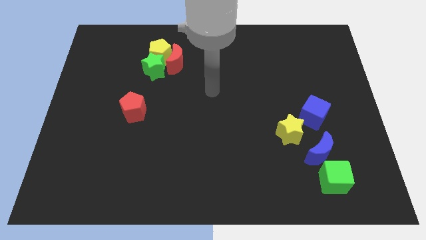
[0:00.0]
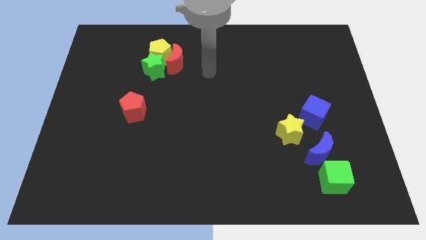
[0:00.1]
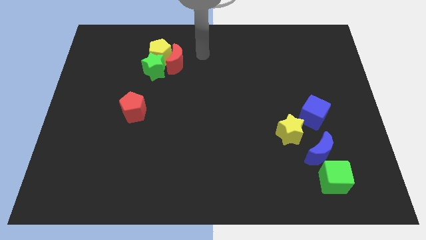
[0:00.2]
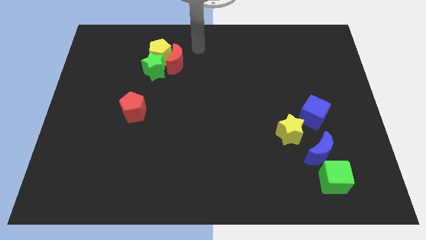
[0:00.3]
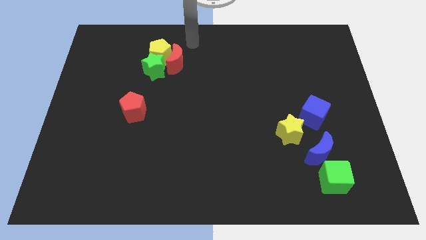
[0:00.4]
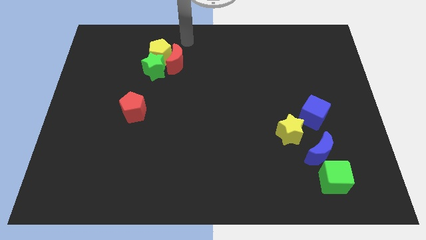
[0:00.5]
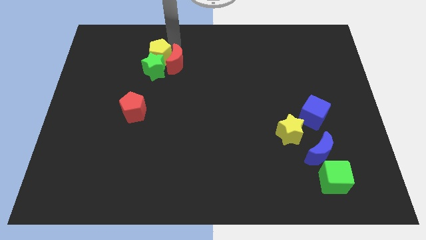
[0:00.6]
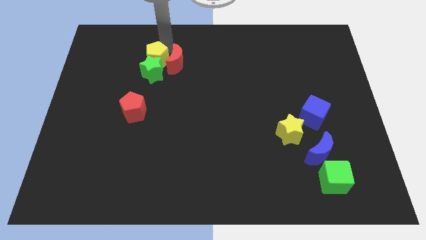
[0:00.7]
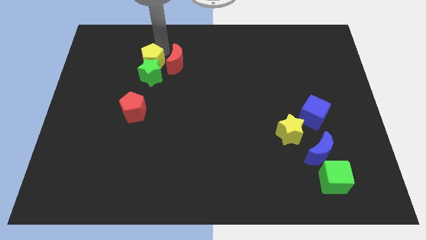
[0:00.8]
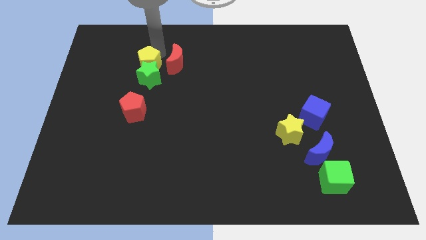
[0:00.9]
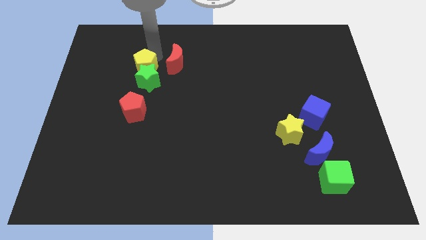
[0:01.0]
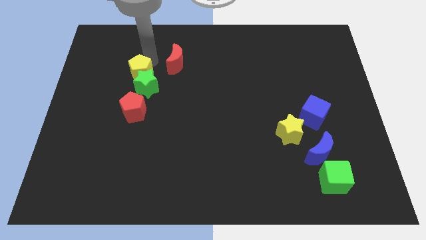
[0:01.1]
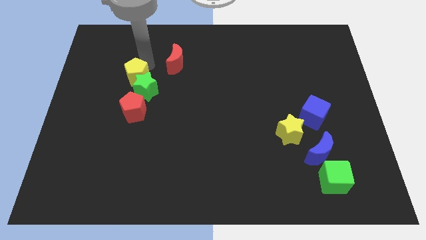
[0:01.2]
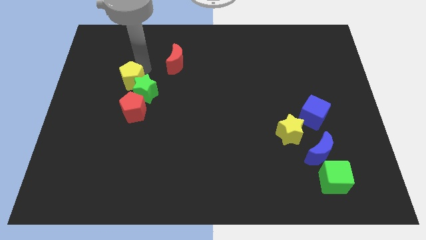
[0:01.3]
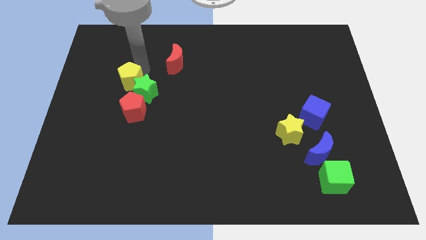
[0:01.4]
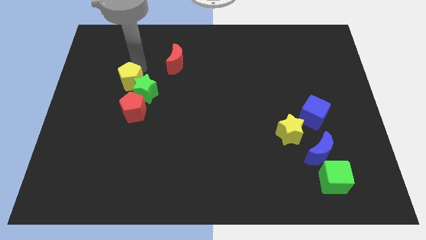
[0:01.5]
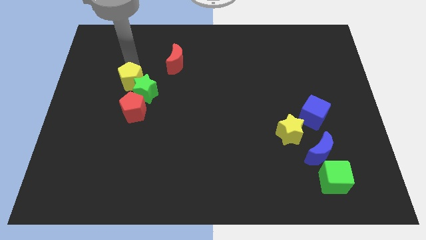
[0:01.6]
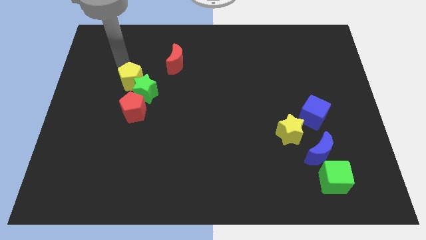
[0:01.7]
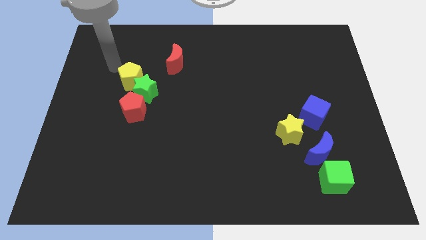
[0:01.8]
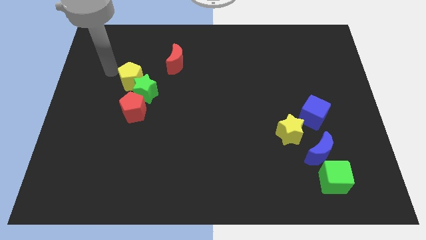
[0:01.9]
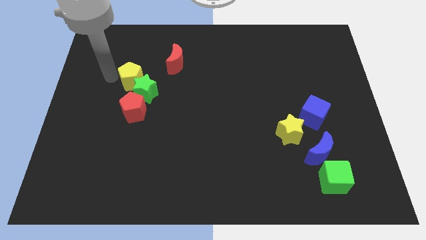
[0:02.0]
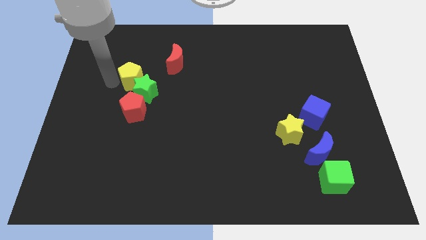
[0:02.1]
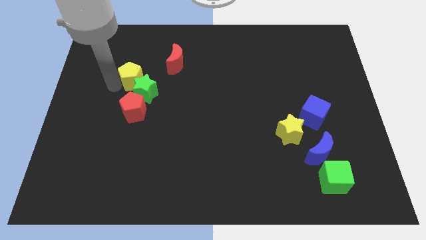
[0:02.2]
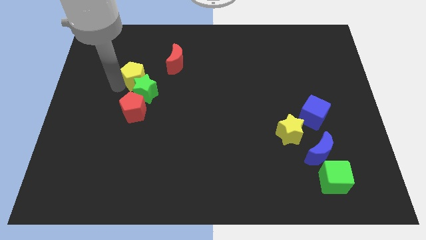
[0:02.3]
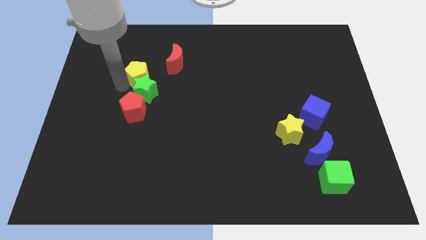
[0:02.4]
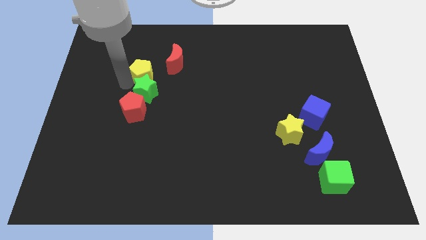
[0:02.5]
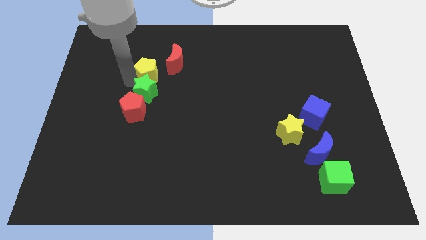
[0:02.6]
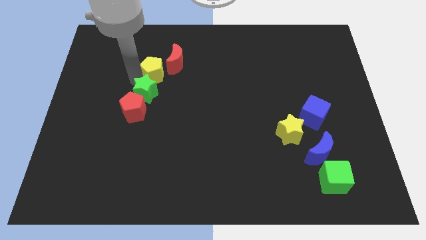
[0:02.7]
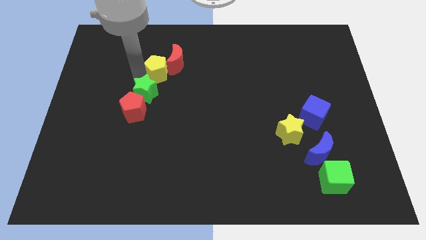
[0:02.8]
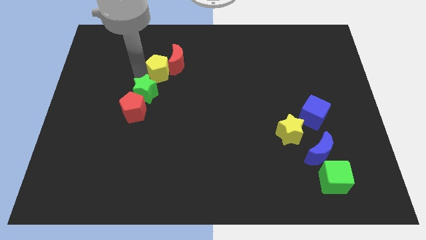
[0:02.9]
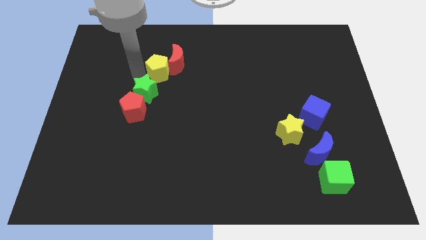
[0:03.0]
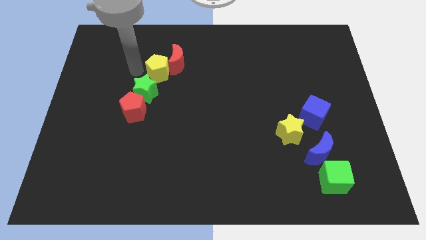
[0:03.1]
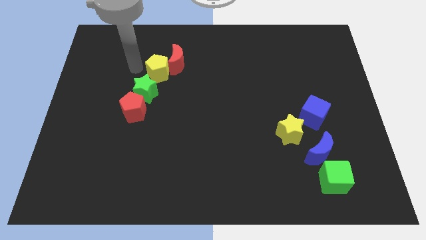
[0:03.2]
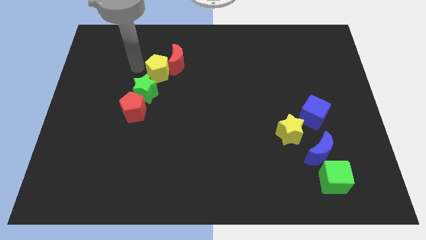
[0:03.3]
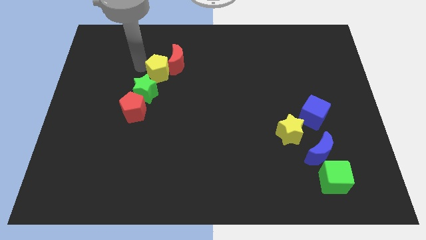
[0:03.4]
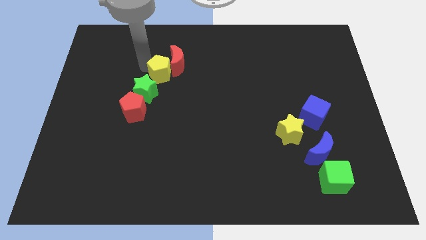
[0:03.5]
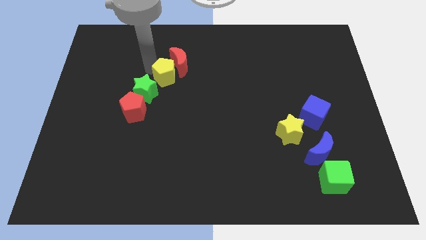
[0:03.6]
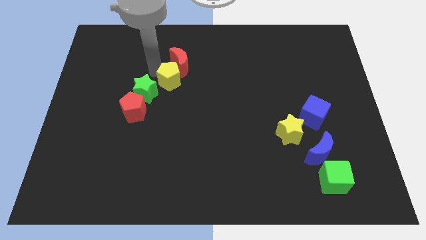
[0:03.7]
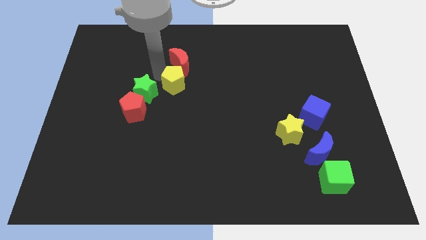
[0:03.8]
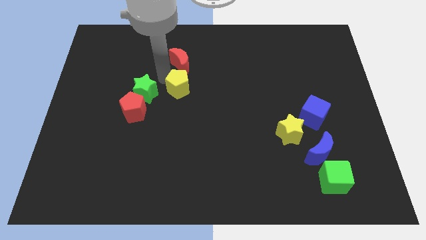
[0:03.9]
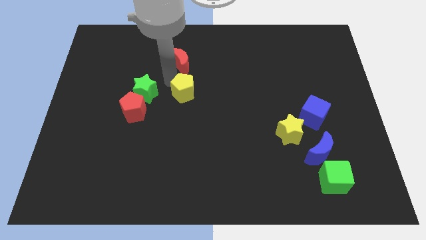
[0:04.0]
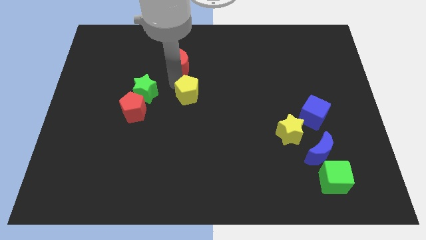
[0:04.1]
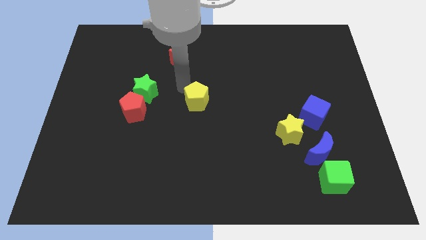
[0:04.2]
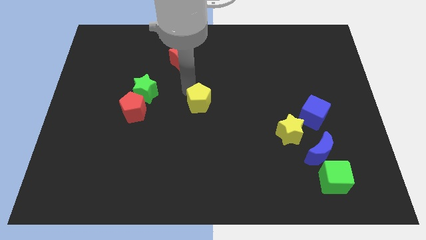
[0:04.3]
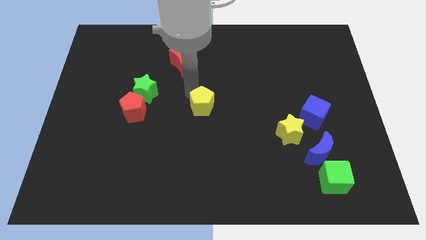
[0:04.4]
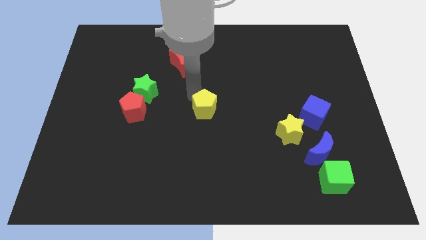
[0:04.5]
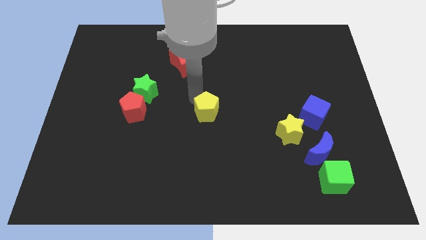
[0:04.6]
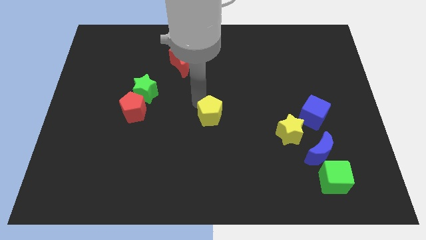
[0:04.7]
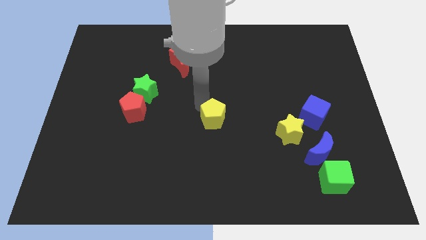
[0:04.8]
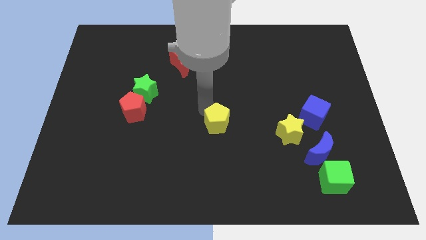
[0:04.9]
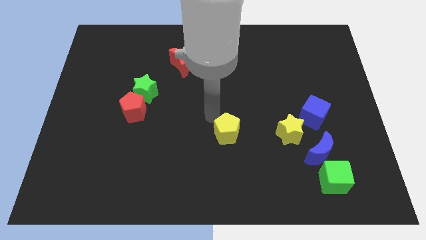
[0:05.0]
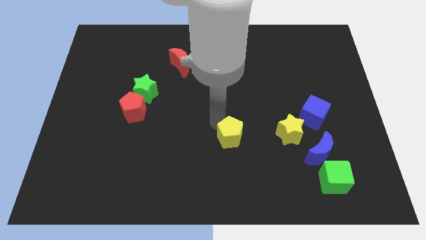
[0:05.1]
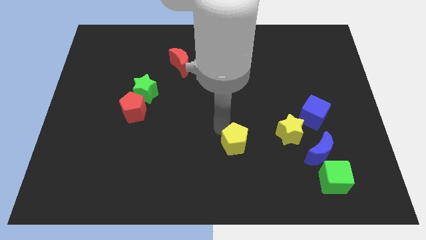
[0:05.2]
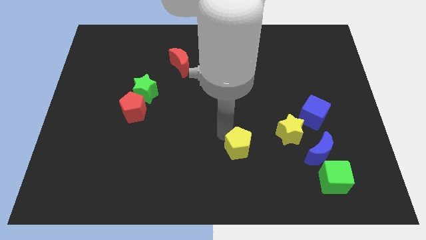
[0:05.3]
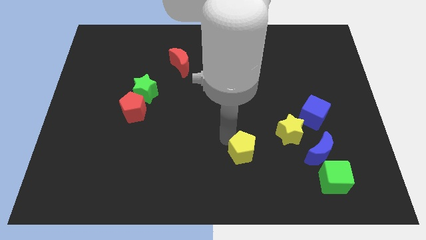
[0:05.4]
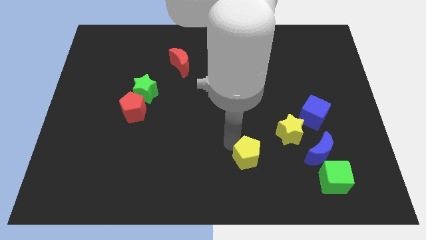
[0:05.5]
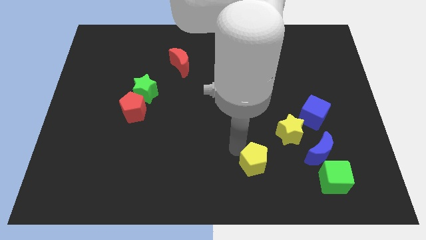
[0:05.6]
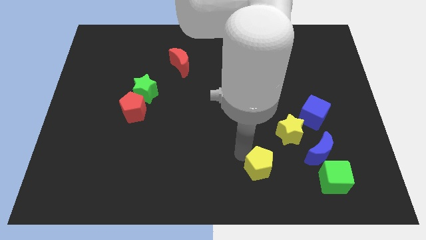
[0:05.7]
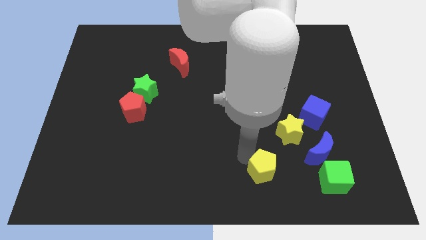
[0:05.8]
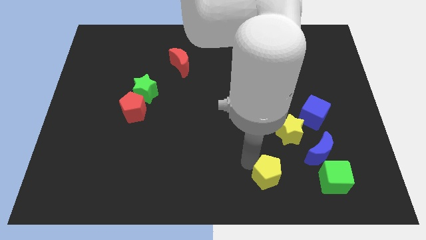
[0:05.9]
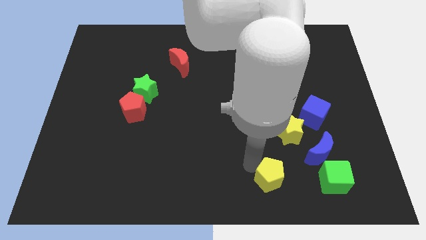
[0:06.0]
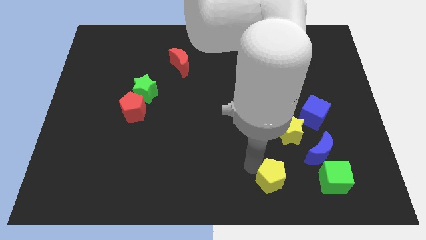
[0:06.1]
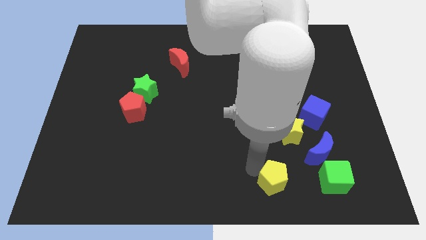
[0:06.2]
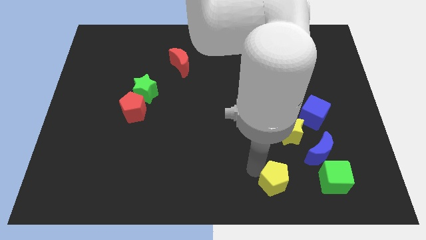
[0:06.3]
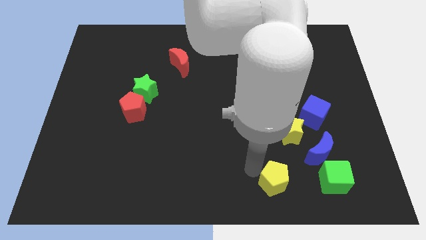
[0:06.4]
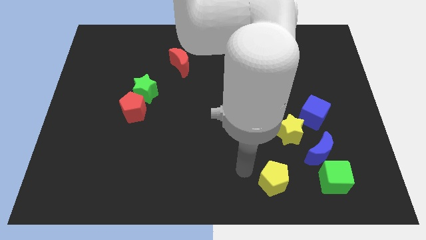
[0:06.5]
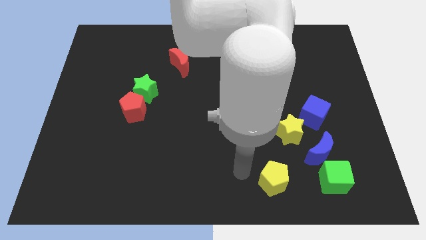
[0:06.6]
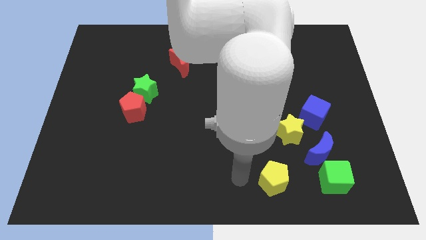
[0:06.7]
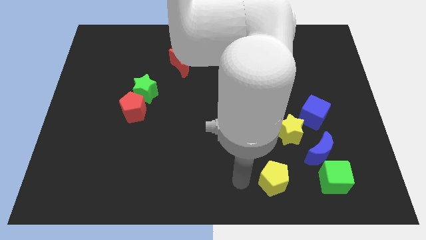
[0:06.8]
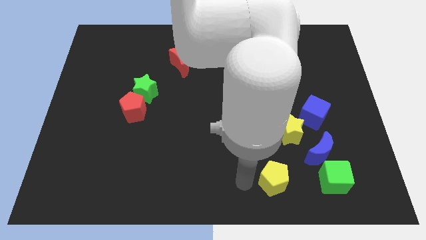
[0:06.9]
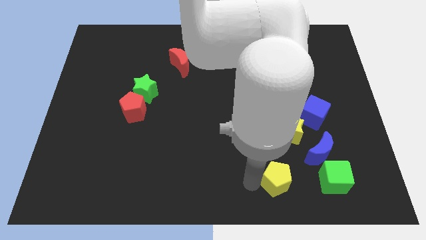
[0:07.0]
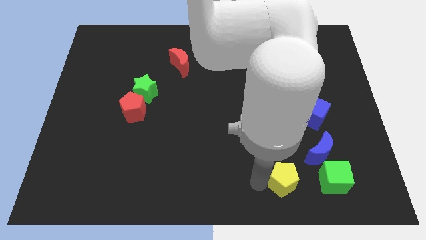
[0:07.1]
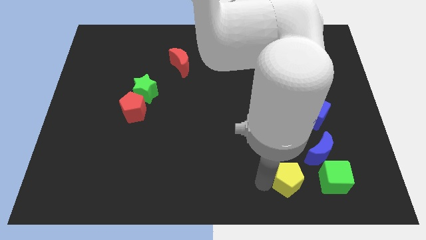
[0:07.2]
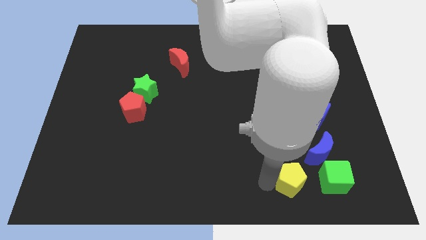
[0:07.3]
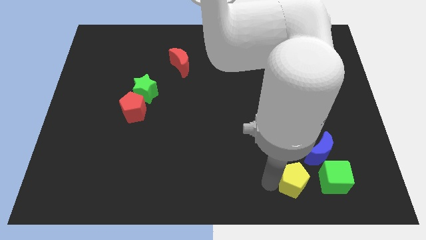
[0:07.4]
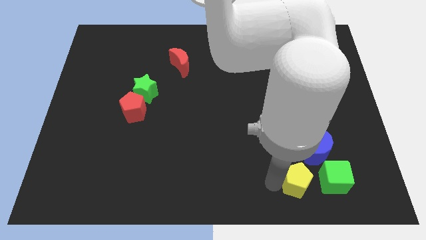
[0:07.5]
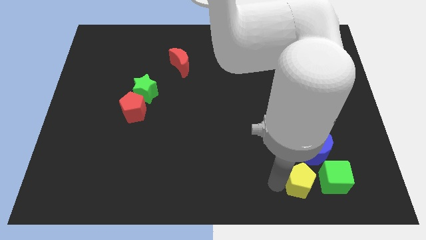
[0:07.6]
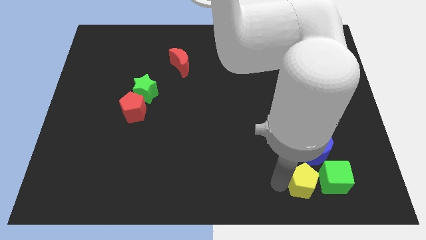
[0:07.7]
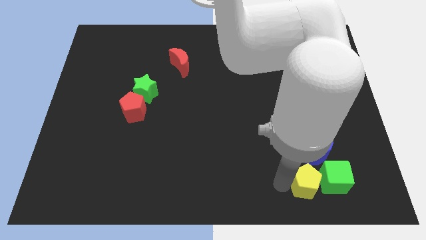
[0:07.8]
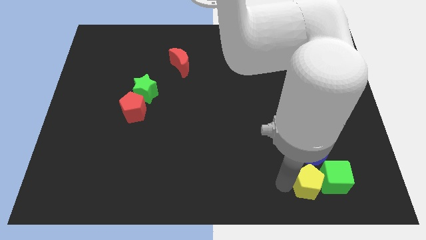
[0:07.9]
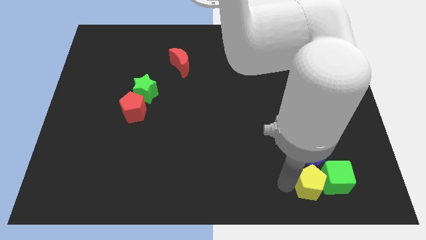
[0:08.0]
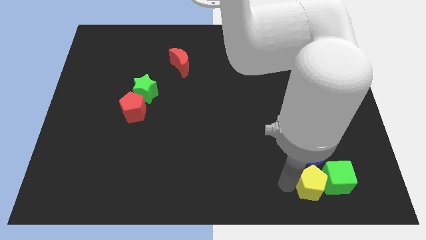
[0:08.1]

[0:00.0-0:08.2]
push the yellow pentagon towards the green cube

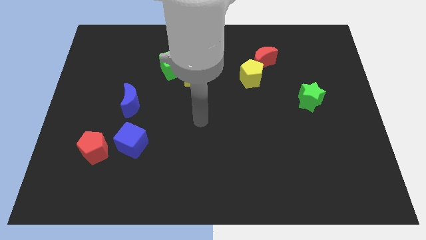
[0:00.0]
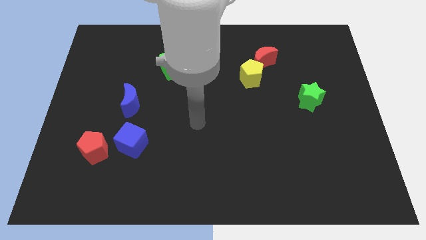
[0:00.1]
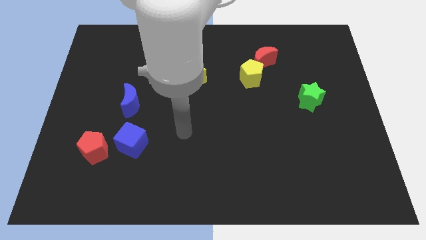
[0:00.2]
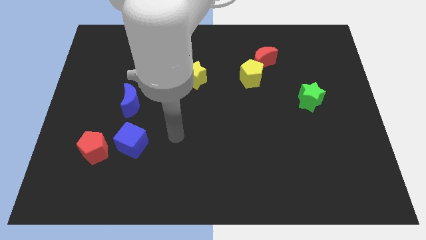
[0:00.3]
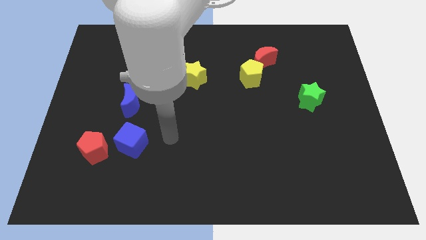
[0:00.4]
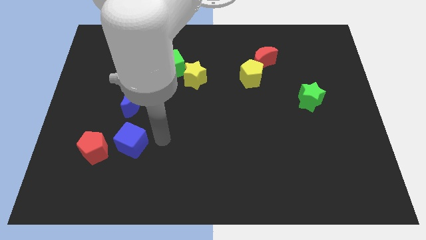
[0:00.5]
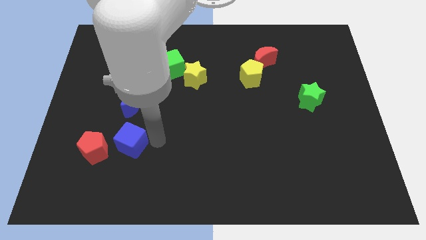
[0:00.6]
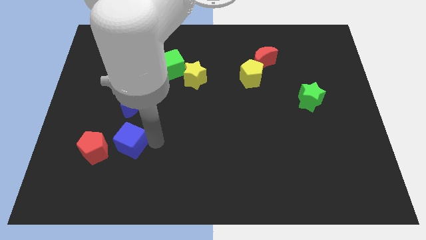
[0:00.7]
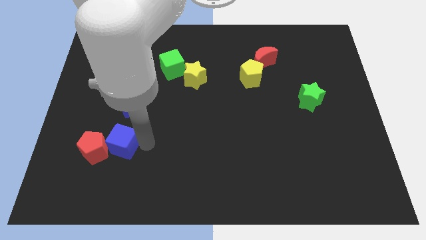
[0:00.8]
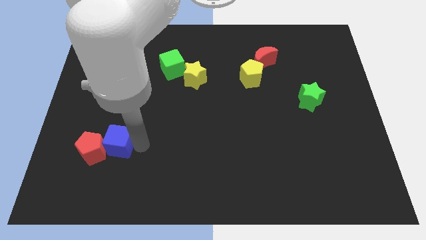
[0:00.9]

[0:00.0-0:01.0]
slide the blue cube close to the red pentagon
